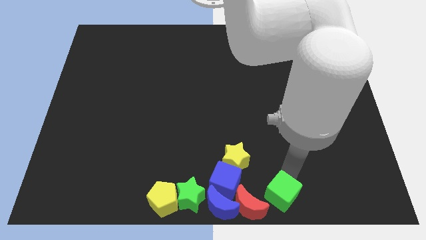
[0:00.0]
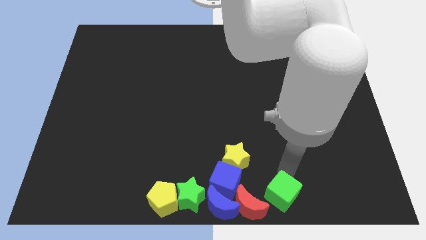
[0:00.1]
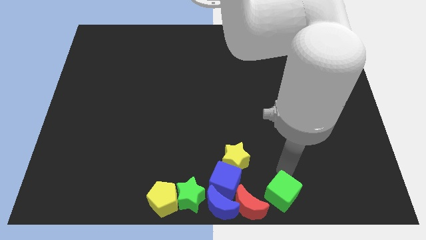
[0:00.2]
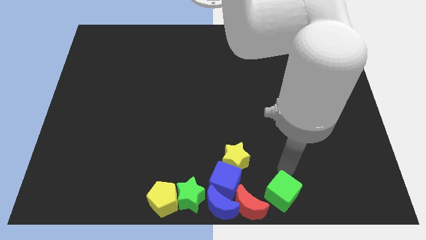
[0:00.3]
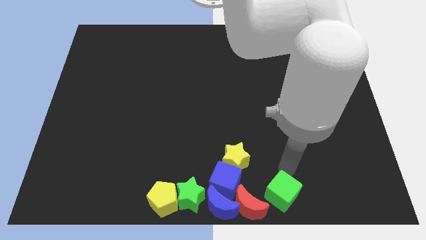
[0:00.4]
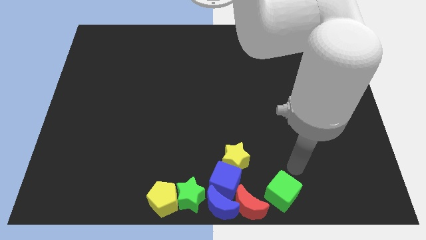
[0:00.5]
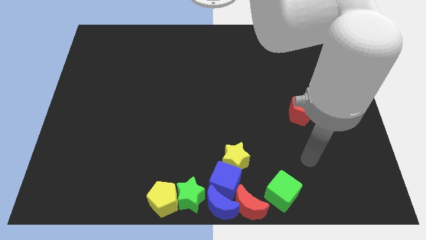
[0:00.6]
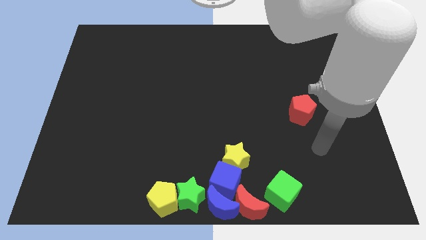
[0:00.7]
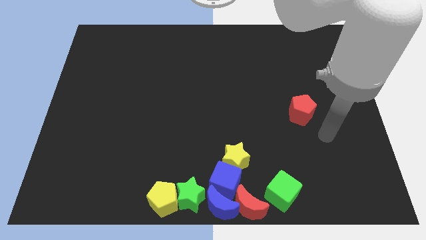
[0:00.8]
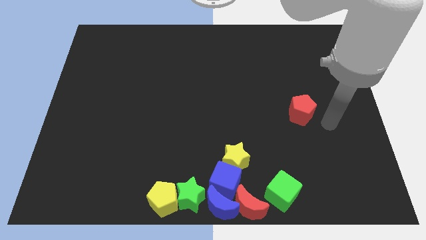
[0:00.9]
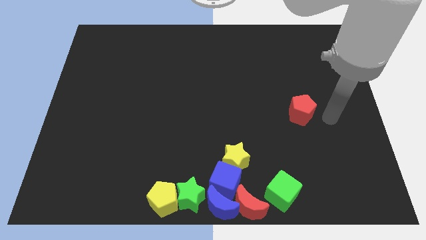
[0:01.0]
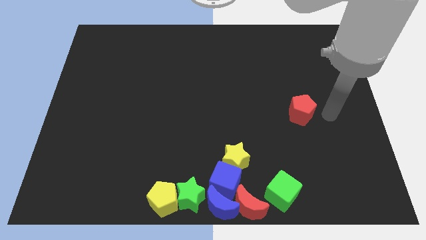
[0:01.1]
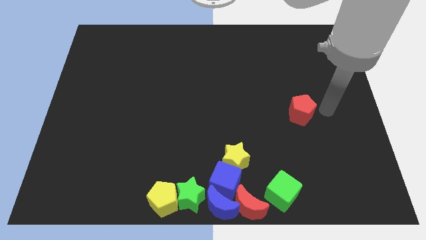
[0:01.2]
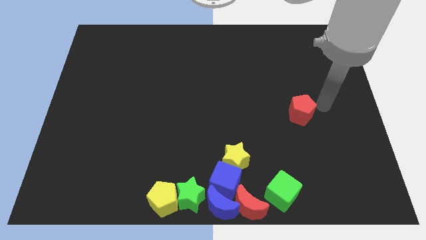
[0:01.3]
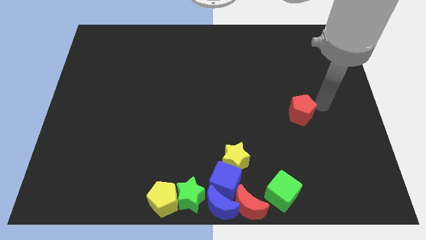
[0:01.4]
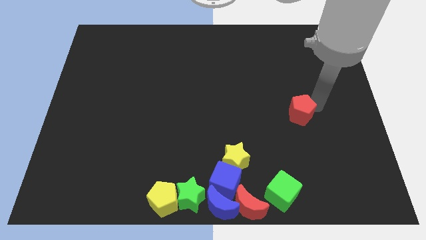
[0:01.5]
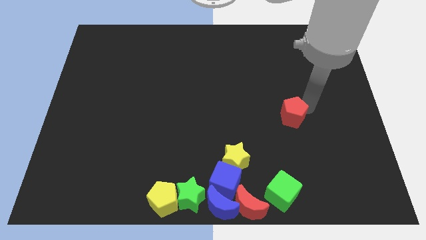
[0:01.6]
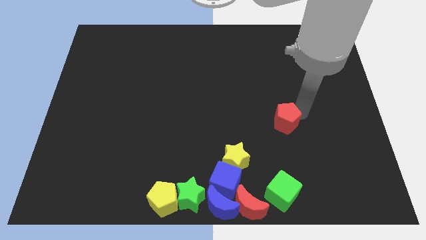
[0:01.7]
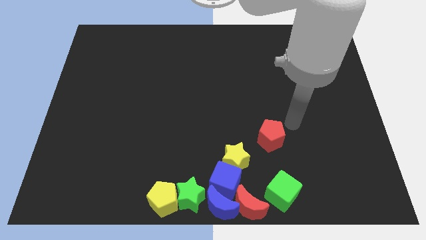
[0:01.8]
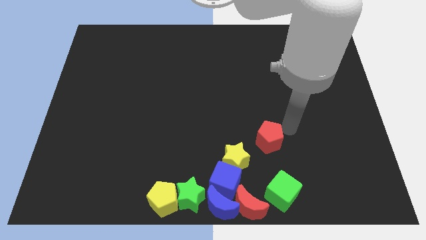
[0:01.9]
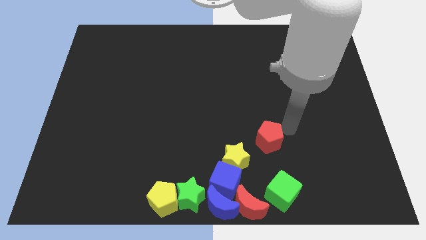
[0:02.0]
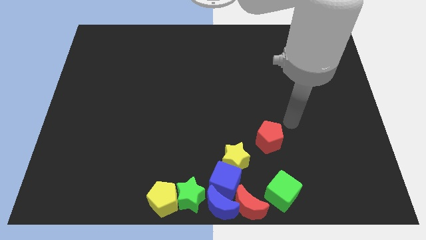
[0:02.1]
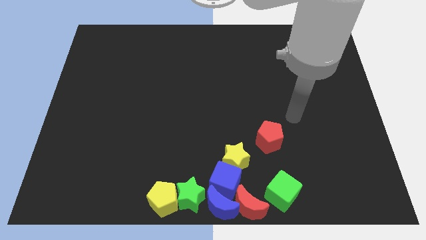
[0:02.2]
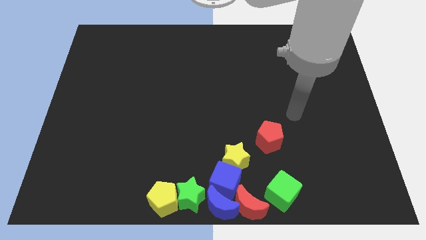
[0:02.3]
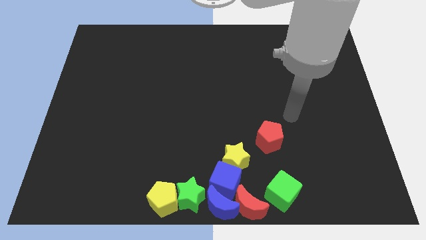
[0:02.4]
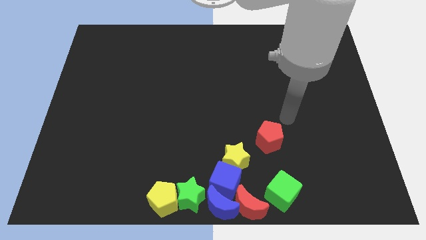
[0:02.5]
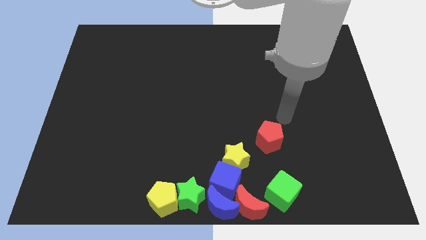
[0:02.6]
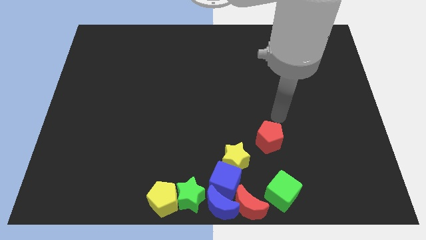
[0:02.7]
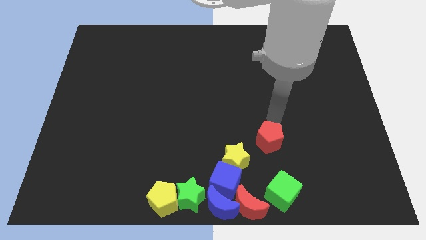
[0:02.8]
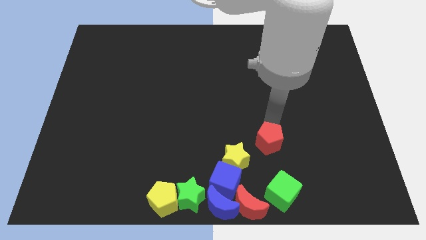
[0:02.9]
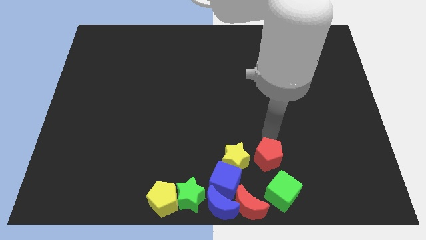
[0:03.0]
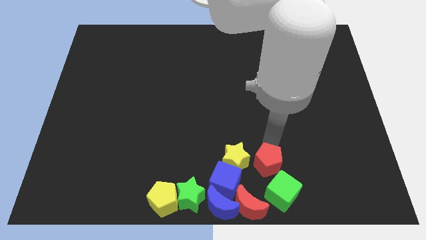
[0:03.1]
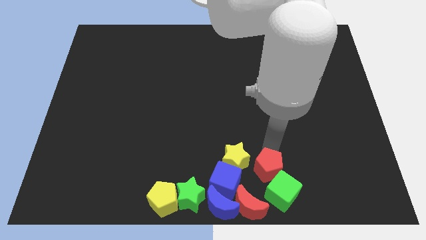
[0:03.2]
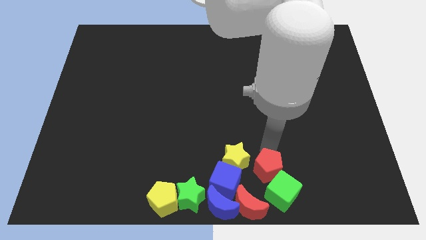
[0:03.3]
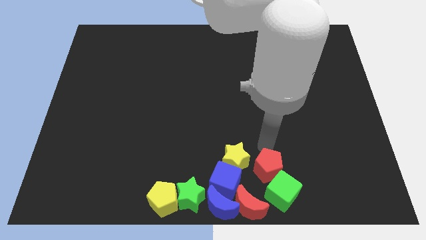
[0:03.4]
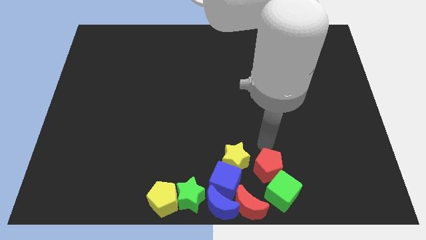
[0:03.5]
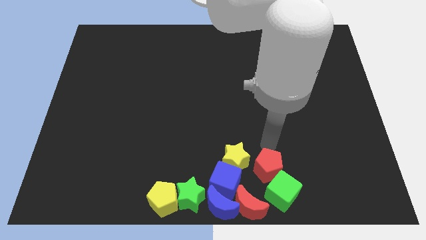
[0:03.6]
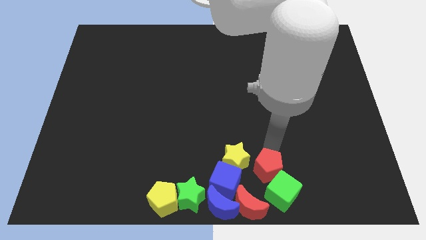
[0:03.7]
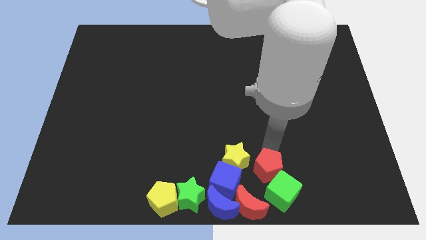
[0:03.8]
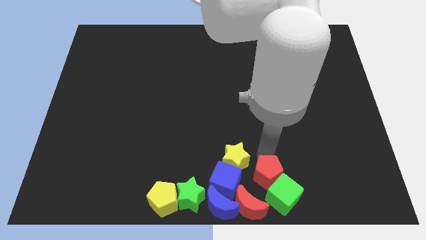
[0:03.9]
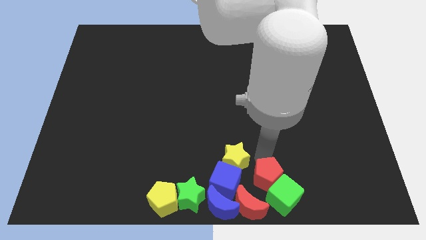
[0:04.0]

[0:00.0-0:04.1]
move red pentagon close to the green cube

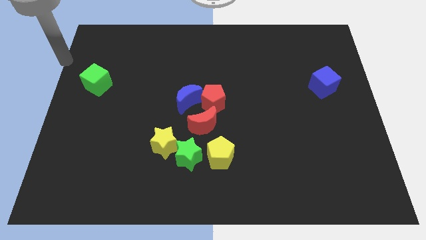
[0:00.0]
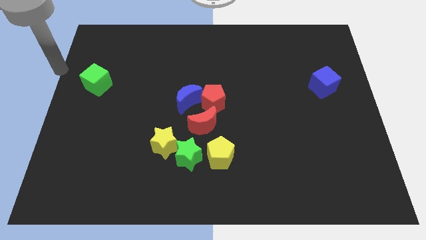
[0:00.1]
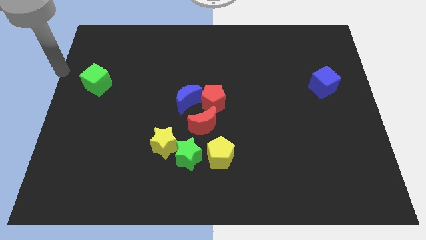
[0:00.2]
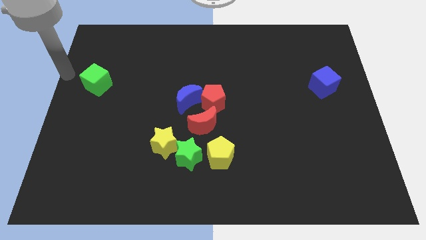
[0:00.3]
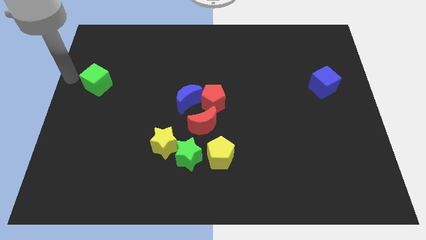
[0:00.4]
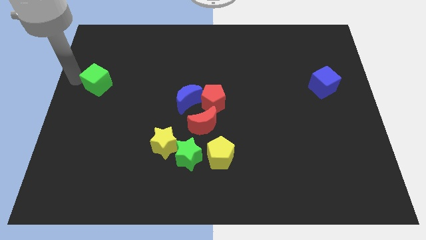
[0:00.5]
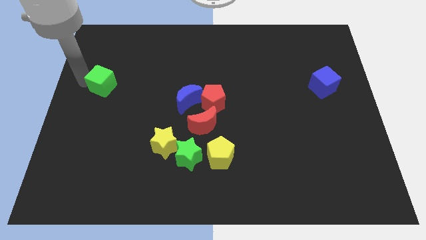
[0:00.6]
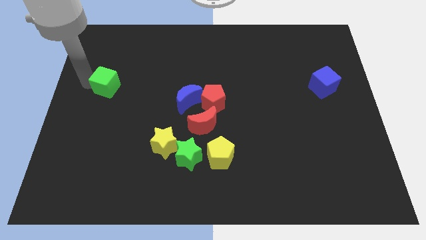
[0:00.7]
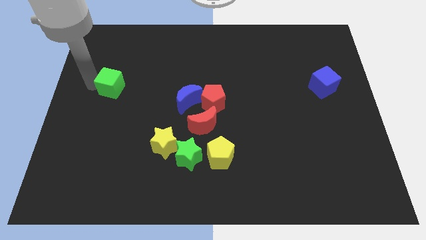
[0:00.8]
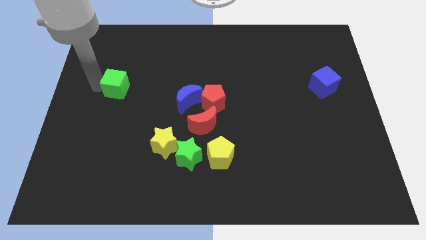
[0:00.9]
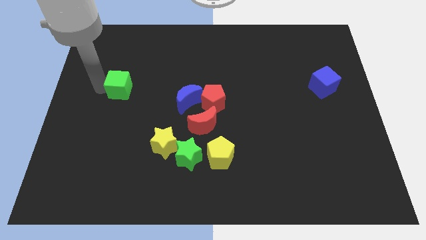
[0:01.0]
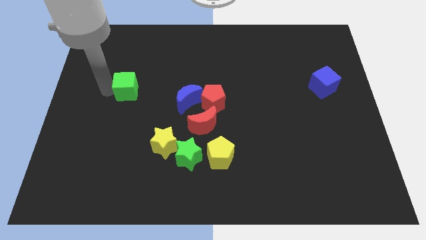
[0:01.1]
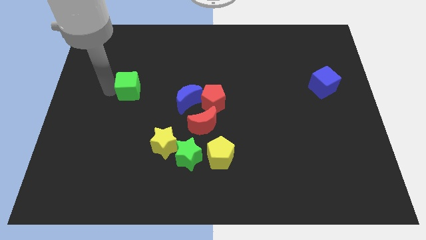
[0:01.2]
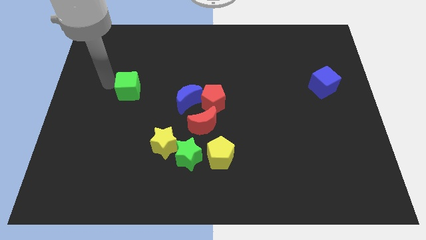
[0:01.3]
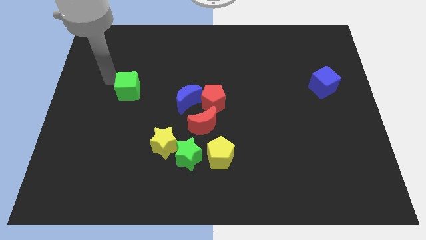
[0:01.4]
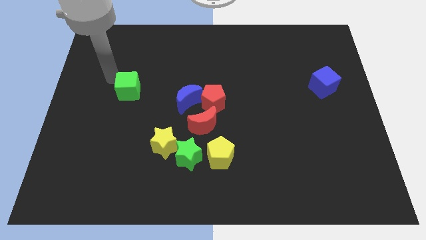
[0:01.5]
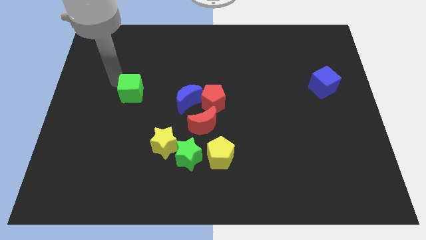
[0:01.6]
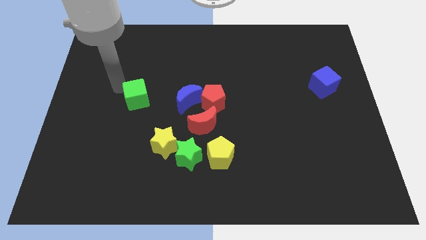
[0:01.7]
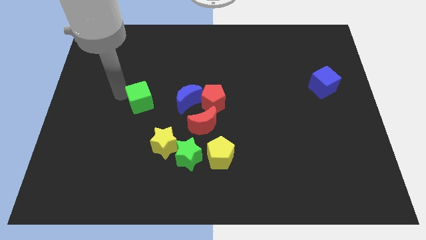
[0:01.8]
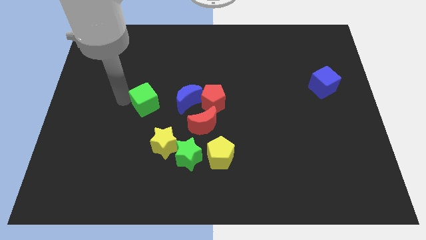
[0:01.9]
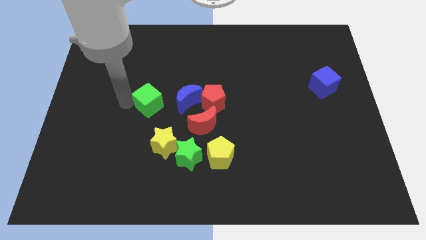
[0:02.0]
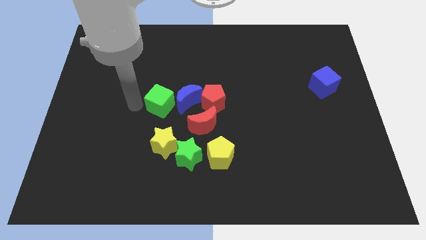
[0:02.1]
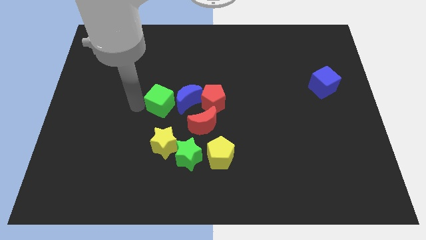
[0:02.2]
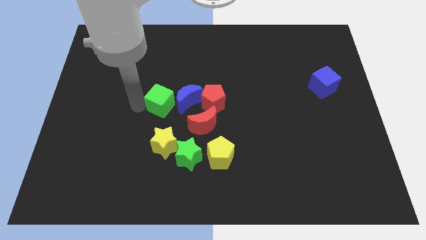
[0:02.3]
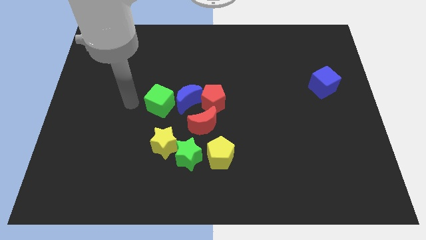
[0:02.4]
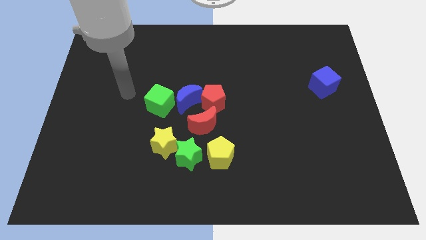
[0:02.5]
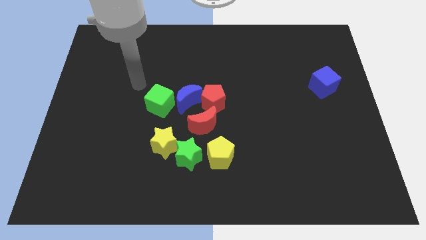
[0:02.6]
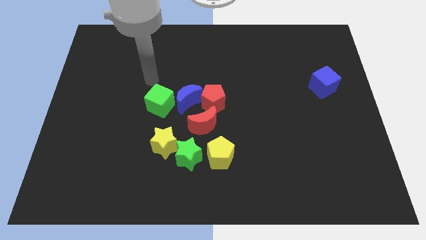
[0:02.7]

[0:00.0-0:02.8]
move the green cube to the left of the blue crescent

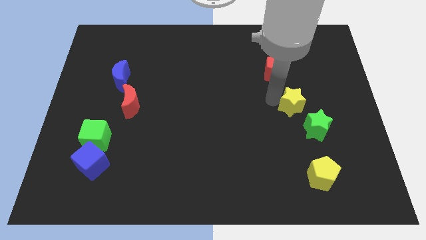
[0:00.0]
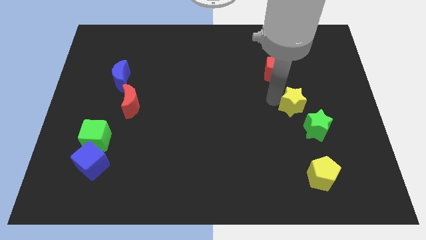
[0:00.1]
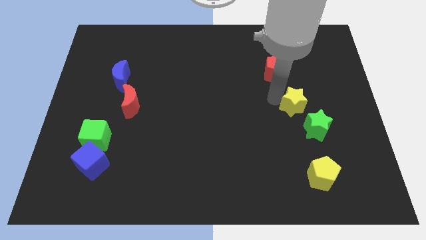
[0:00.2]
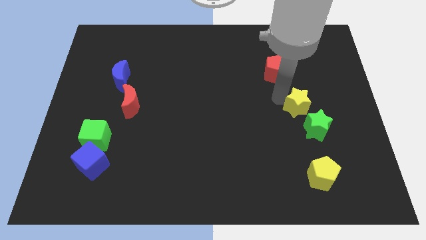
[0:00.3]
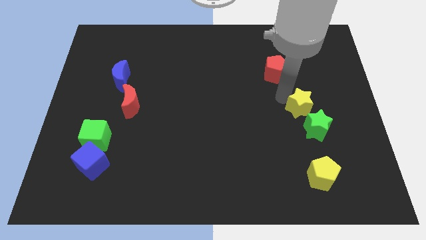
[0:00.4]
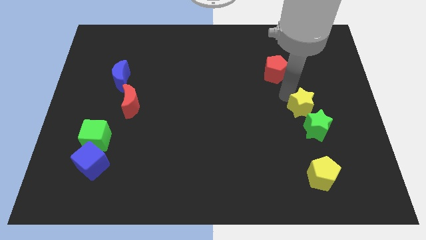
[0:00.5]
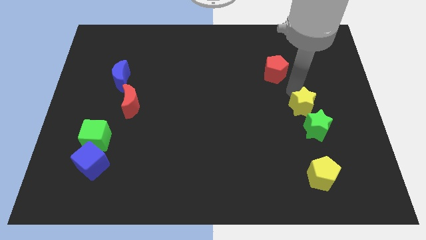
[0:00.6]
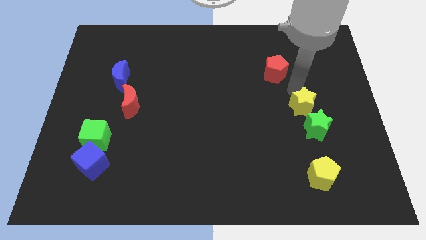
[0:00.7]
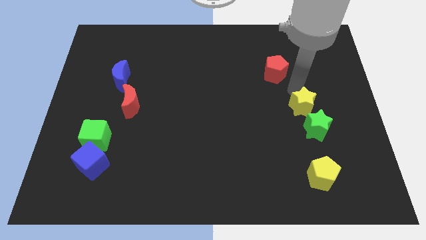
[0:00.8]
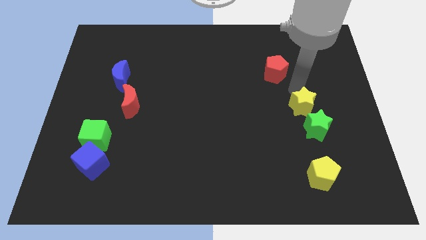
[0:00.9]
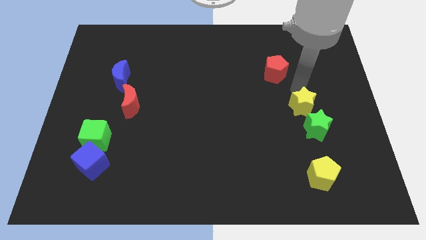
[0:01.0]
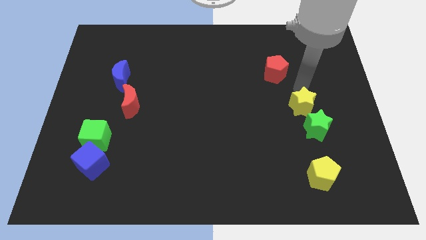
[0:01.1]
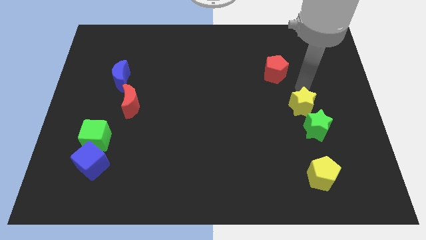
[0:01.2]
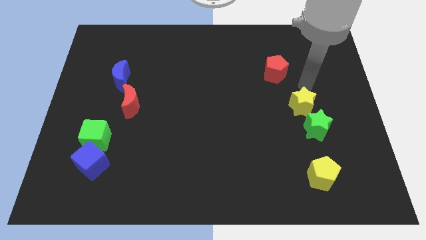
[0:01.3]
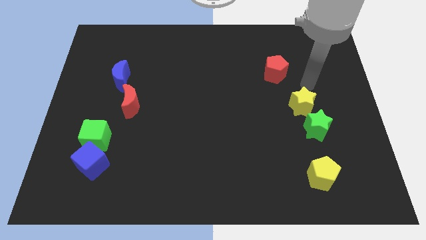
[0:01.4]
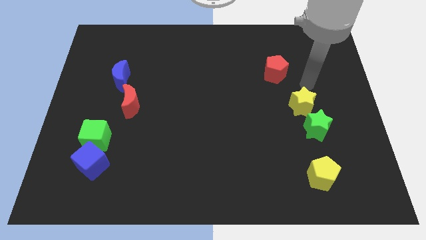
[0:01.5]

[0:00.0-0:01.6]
place yellow star to the top of the green star

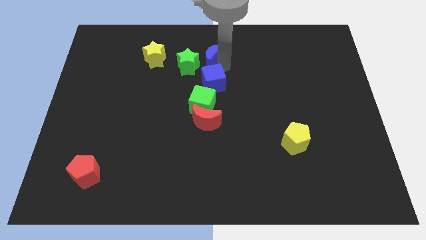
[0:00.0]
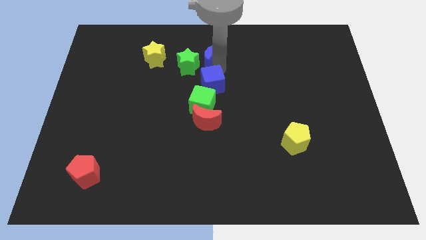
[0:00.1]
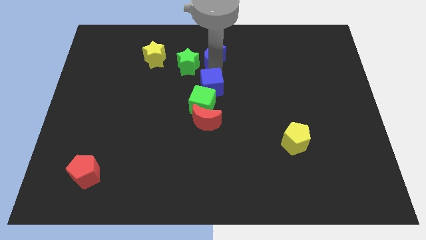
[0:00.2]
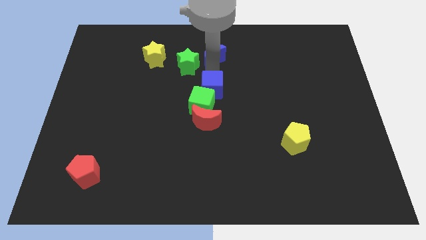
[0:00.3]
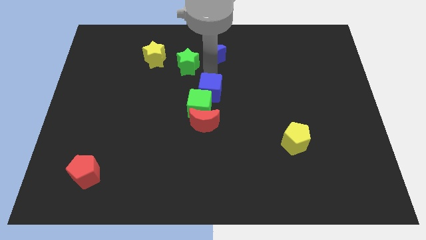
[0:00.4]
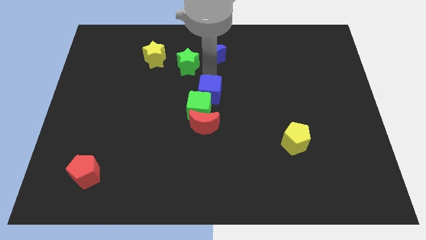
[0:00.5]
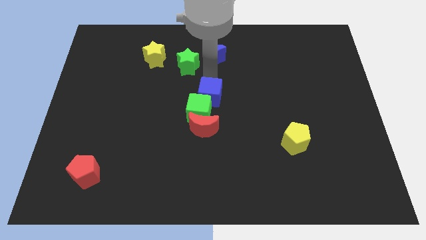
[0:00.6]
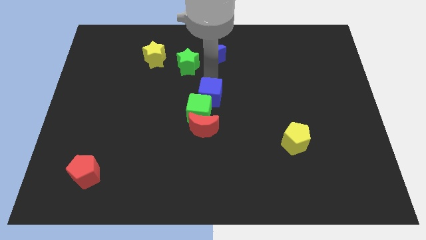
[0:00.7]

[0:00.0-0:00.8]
push the blue cube into the green cube
